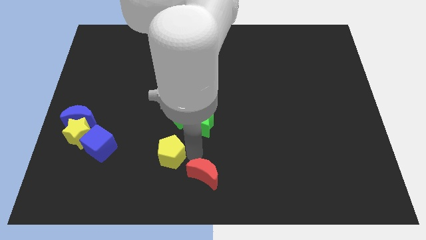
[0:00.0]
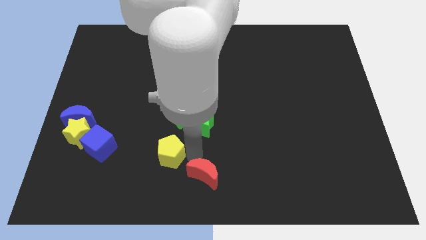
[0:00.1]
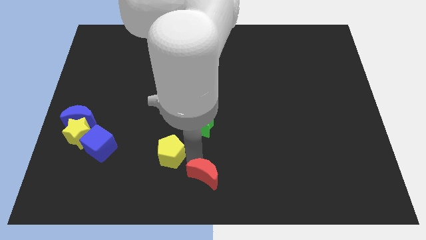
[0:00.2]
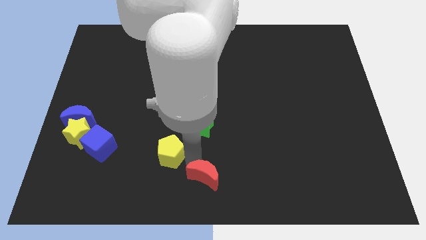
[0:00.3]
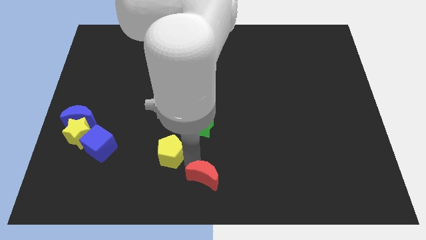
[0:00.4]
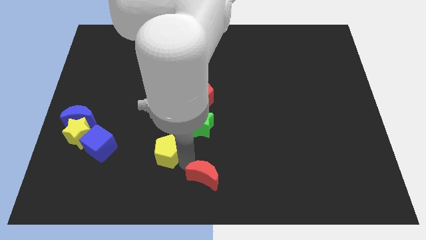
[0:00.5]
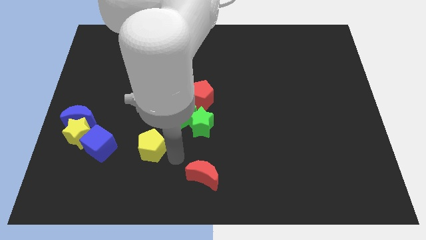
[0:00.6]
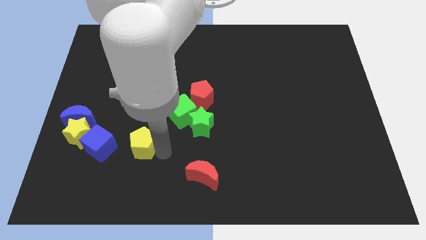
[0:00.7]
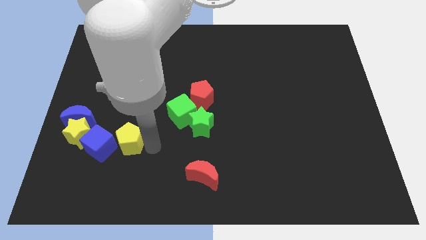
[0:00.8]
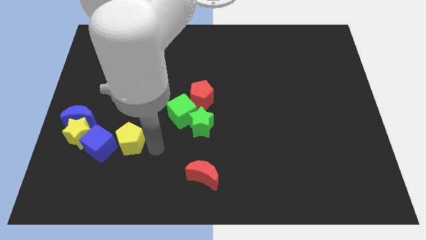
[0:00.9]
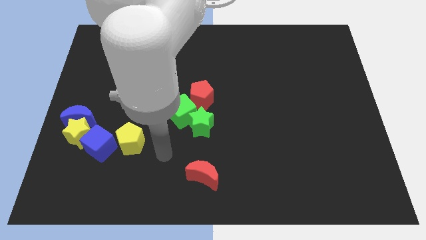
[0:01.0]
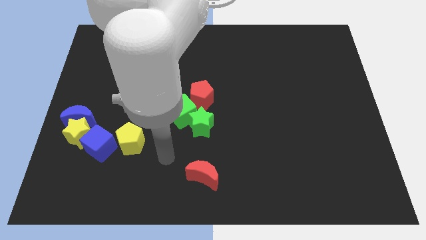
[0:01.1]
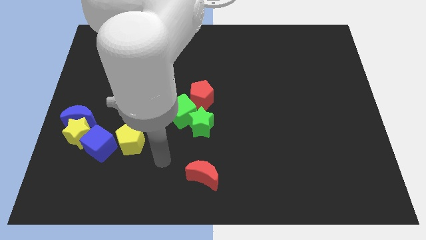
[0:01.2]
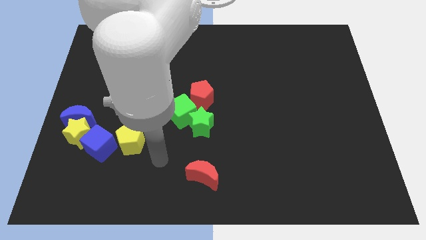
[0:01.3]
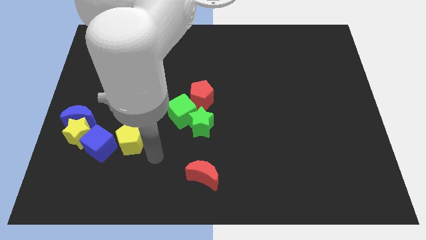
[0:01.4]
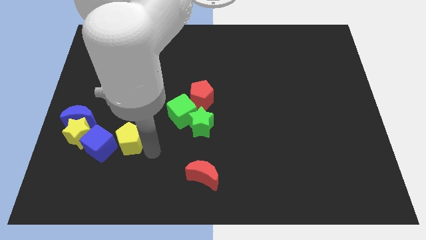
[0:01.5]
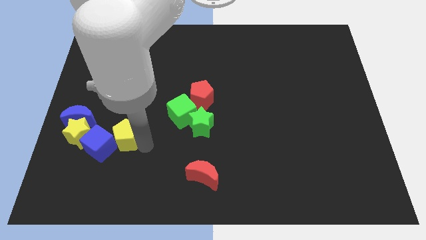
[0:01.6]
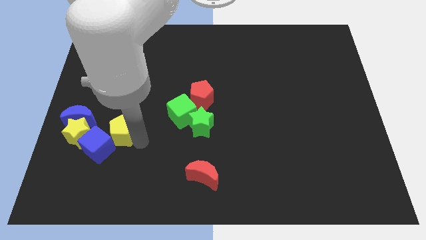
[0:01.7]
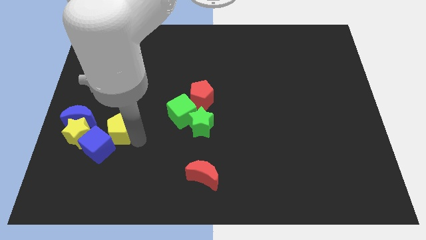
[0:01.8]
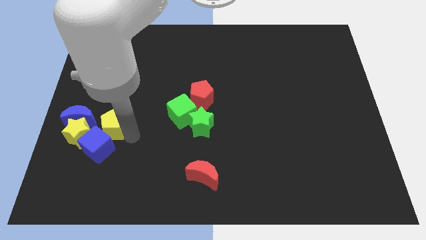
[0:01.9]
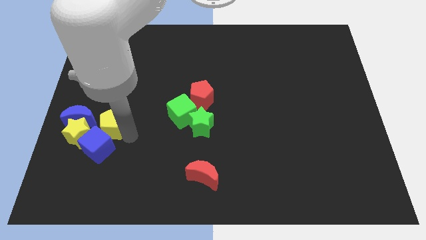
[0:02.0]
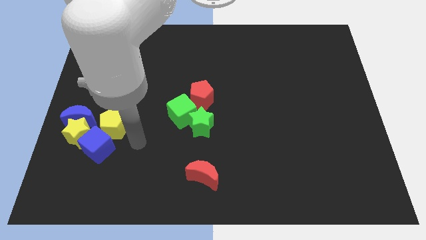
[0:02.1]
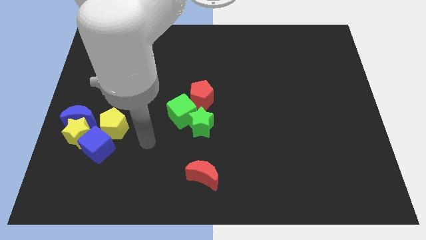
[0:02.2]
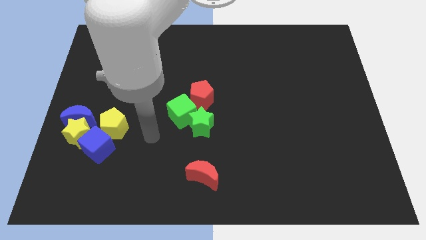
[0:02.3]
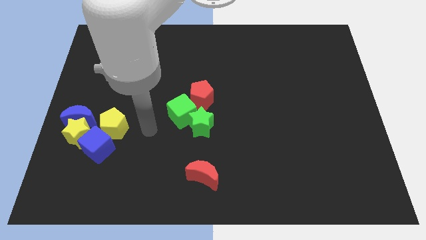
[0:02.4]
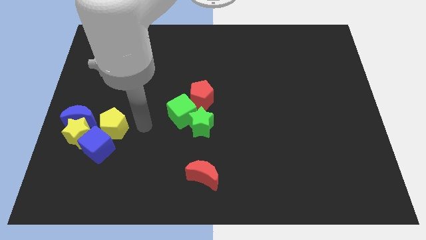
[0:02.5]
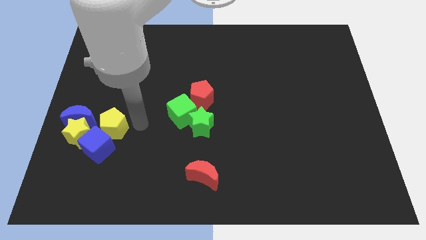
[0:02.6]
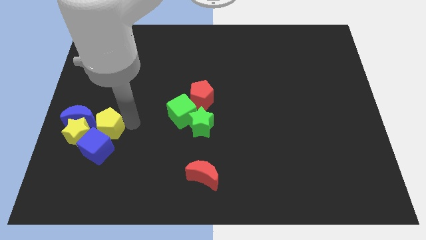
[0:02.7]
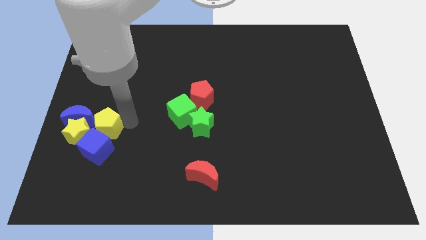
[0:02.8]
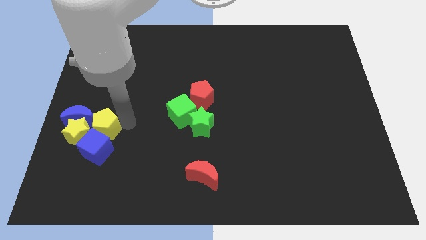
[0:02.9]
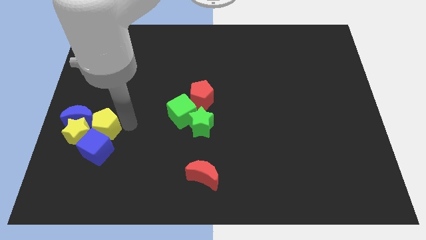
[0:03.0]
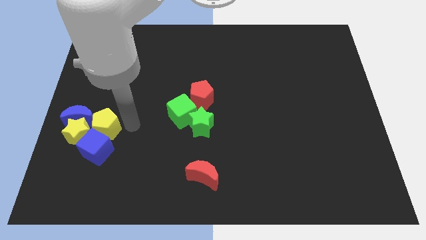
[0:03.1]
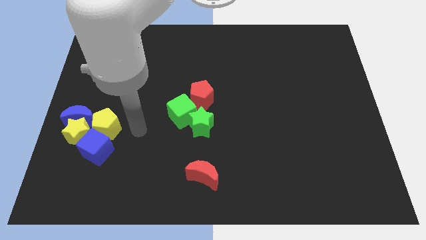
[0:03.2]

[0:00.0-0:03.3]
add the yellow pentagon to the group of both blue blocks and yellow star

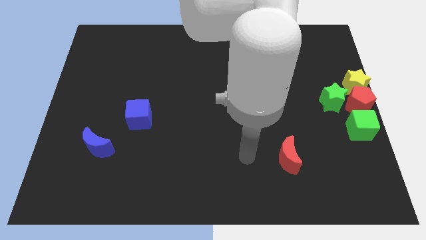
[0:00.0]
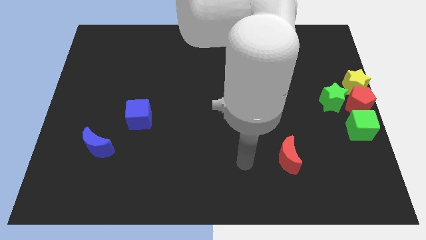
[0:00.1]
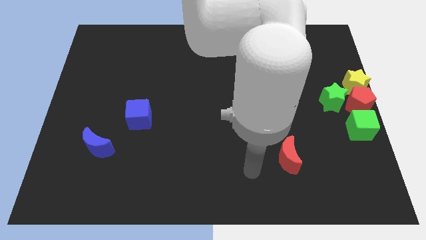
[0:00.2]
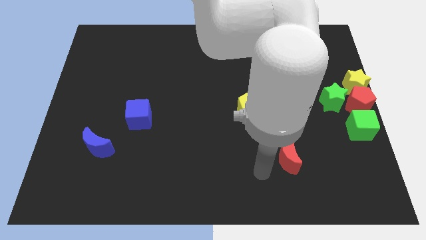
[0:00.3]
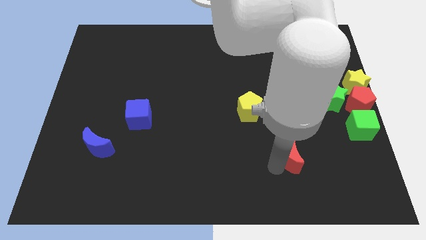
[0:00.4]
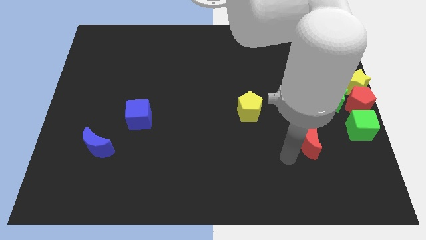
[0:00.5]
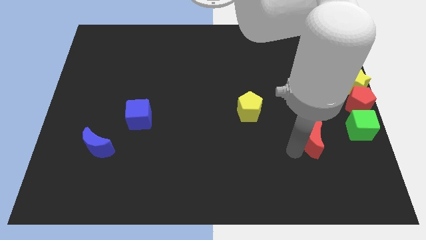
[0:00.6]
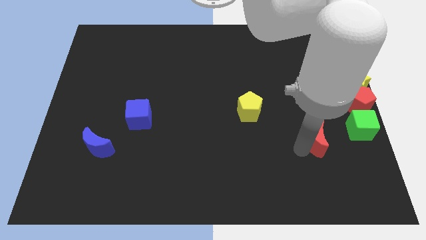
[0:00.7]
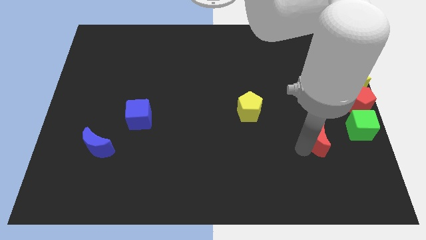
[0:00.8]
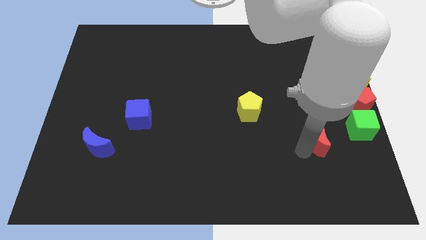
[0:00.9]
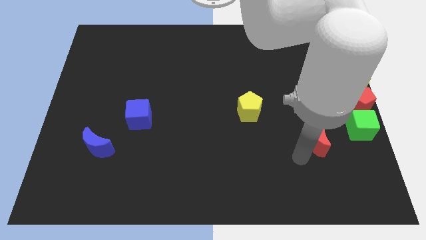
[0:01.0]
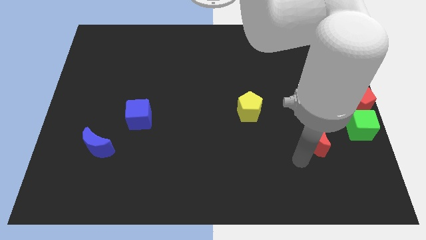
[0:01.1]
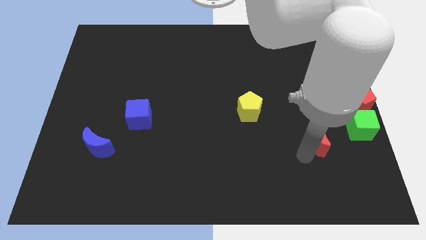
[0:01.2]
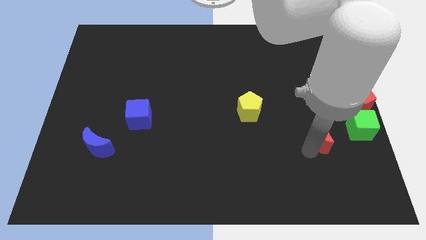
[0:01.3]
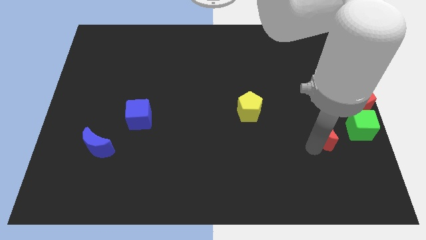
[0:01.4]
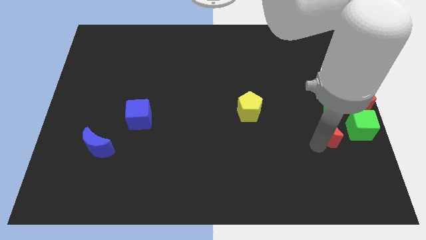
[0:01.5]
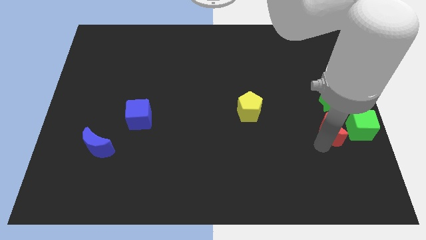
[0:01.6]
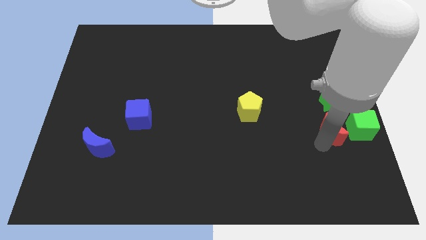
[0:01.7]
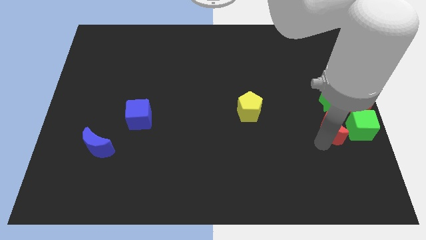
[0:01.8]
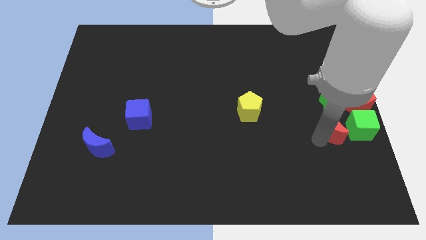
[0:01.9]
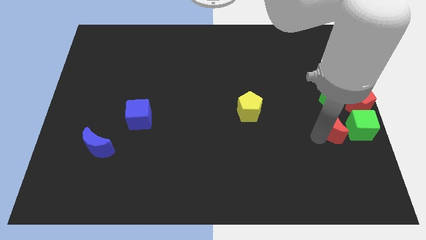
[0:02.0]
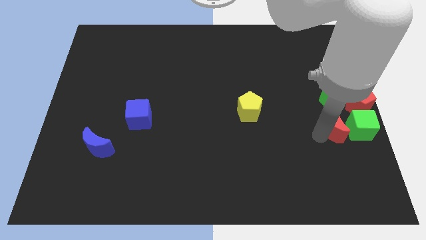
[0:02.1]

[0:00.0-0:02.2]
move the red crescent to the left of the green cube

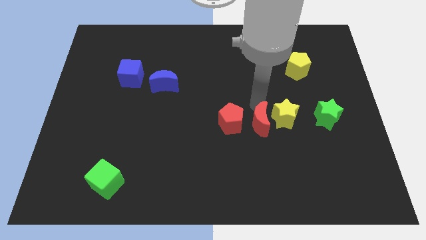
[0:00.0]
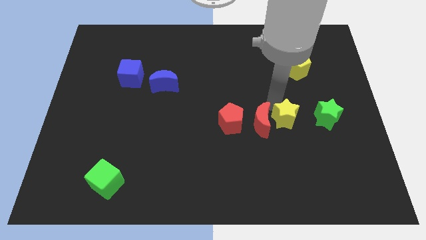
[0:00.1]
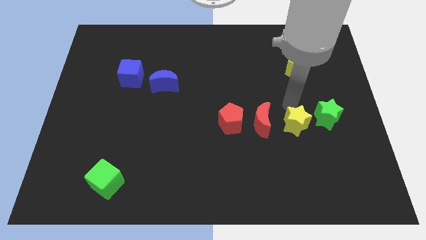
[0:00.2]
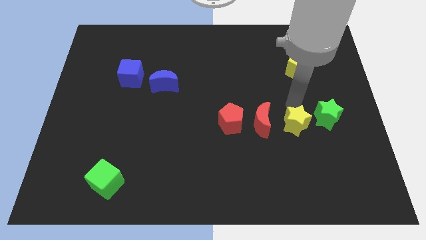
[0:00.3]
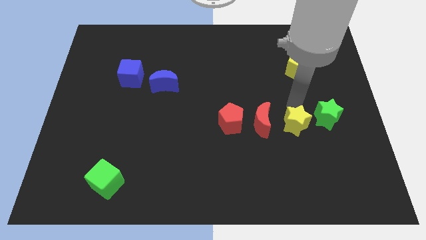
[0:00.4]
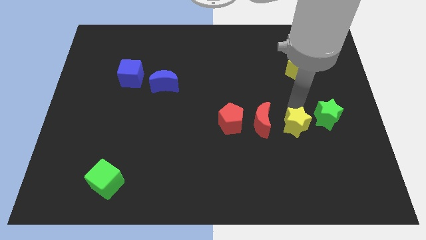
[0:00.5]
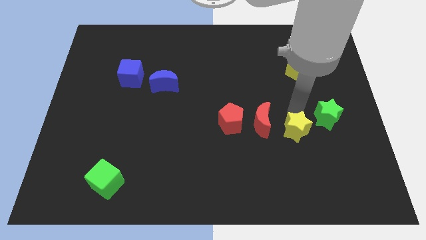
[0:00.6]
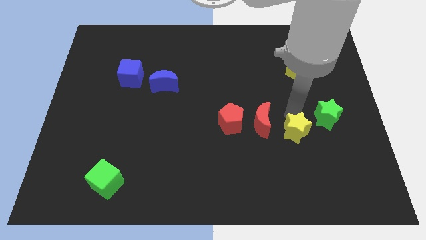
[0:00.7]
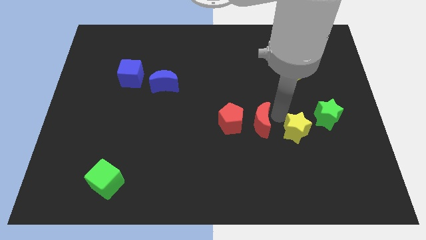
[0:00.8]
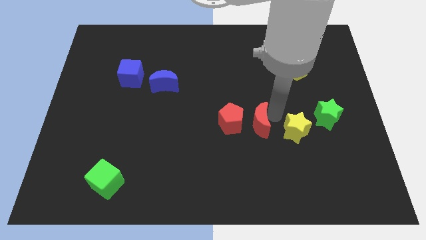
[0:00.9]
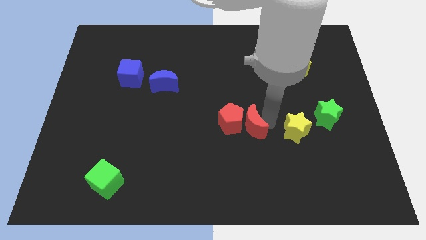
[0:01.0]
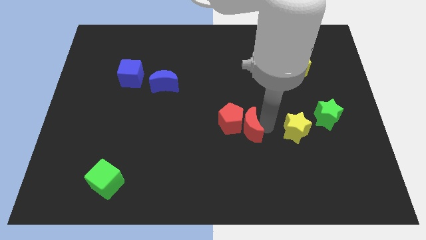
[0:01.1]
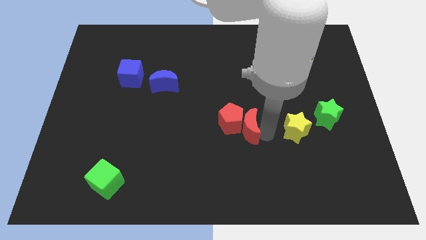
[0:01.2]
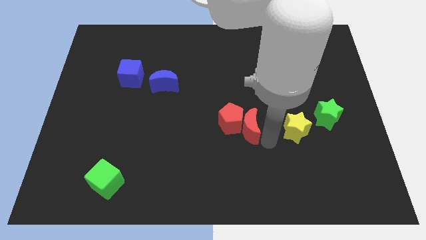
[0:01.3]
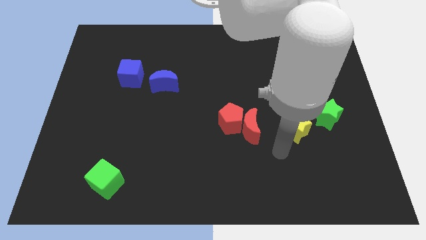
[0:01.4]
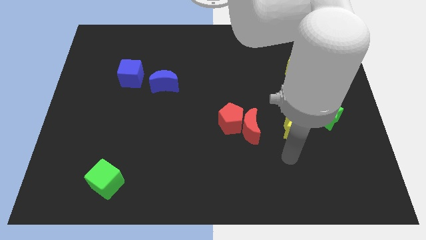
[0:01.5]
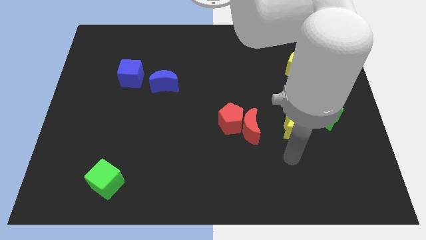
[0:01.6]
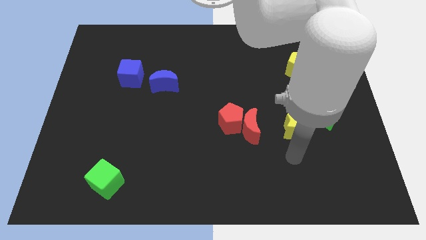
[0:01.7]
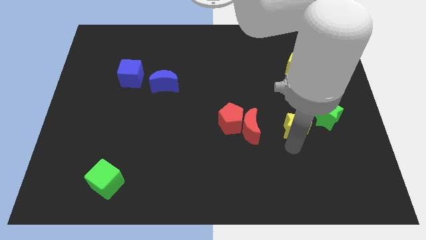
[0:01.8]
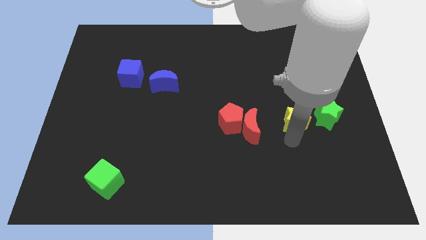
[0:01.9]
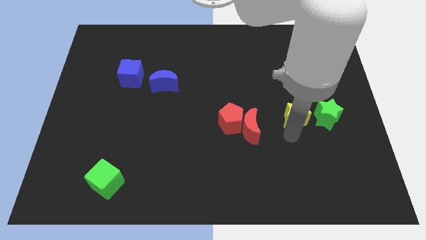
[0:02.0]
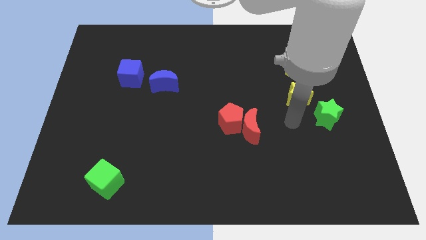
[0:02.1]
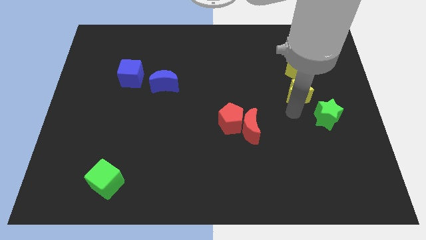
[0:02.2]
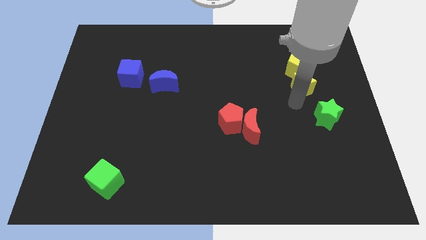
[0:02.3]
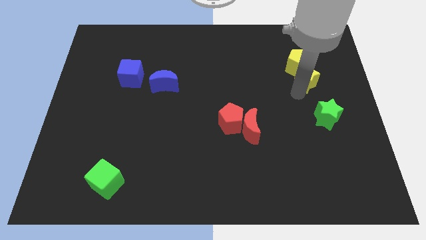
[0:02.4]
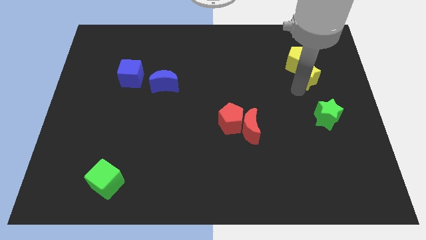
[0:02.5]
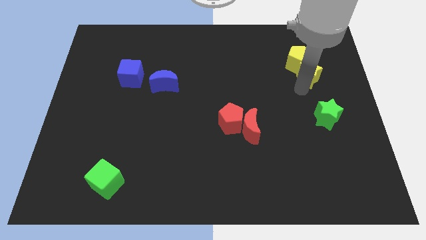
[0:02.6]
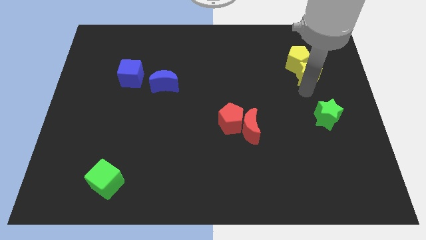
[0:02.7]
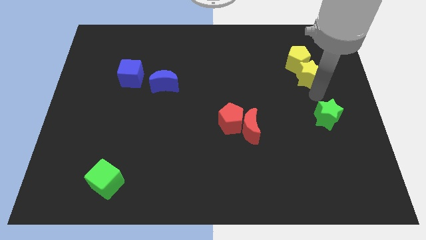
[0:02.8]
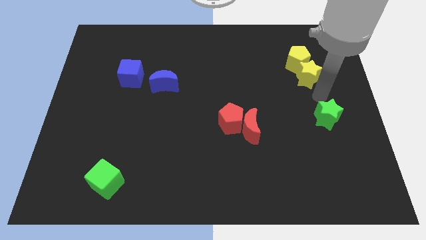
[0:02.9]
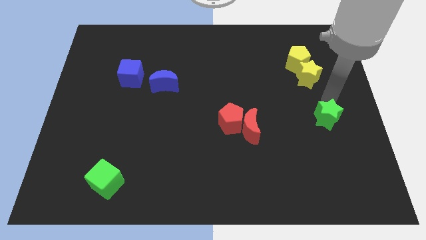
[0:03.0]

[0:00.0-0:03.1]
take the yellow star into the yellow pentagon

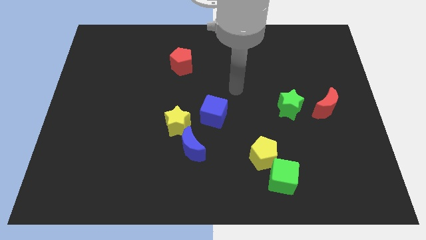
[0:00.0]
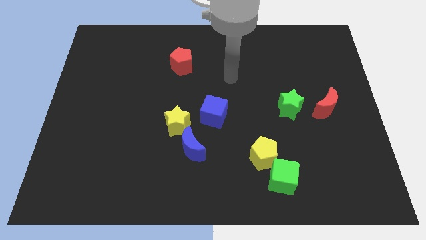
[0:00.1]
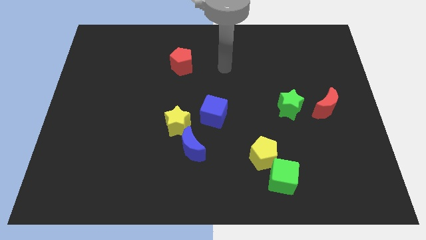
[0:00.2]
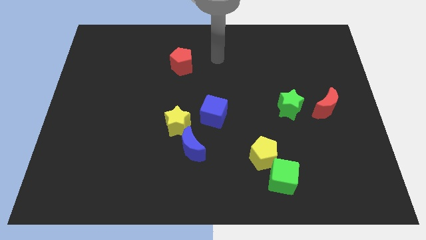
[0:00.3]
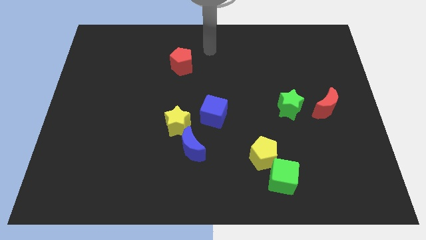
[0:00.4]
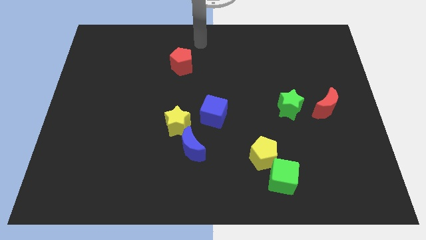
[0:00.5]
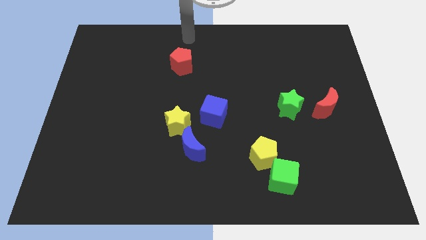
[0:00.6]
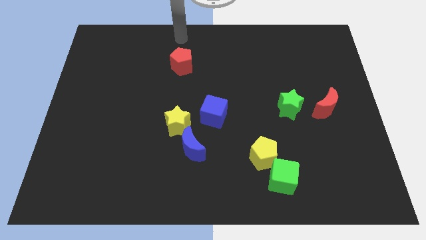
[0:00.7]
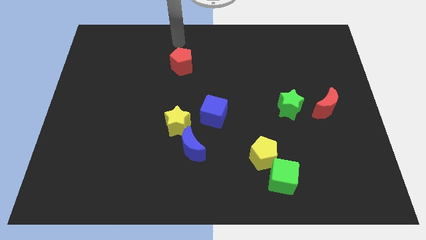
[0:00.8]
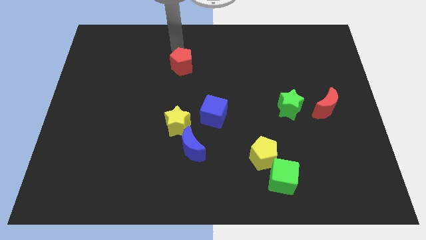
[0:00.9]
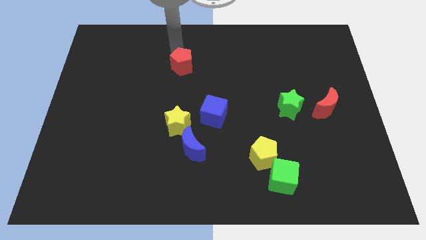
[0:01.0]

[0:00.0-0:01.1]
place the arm above the red pentagon
